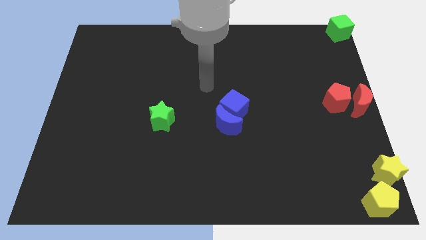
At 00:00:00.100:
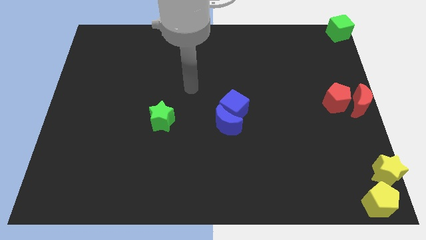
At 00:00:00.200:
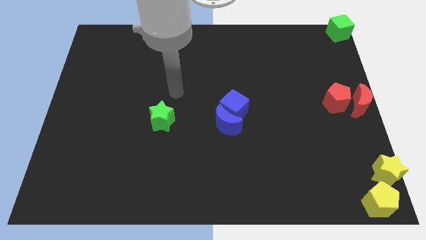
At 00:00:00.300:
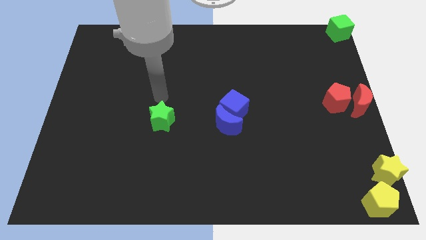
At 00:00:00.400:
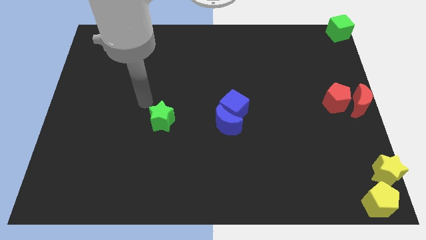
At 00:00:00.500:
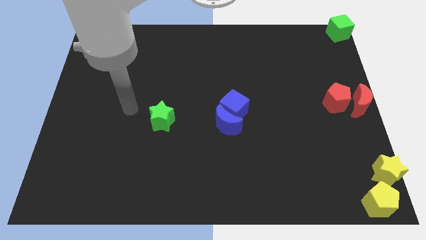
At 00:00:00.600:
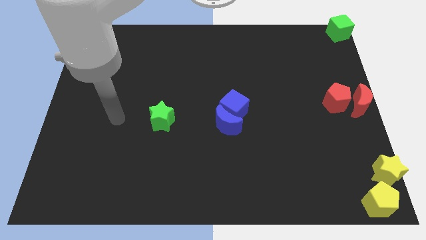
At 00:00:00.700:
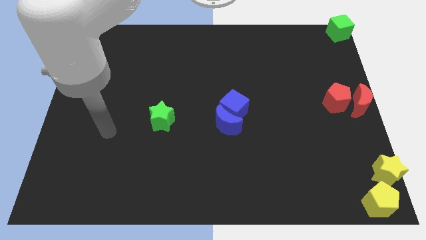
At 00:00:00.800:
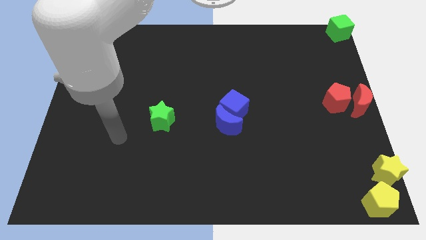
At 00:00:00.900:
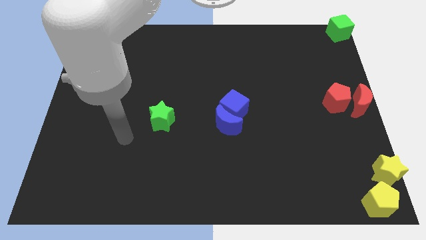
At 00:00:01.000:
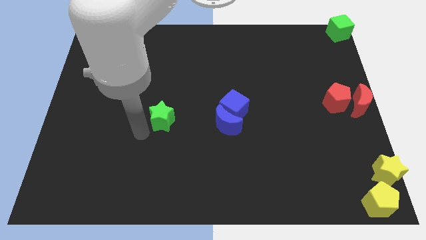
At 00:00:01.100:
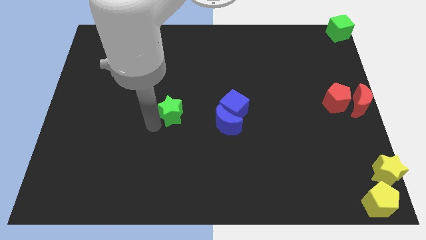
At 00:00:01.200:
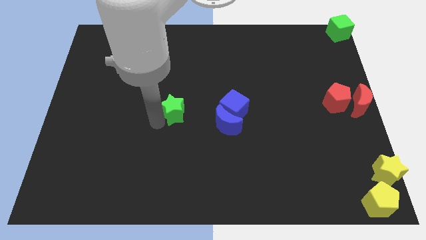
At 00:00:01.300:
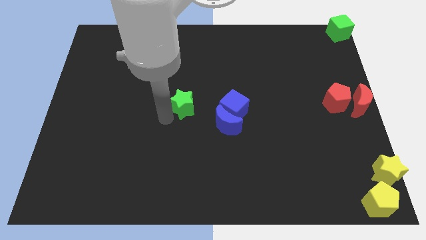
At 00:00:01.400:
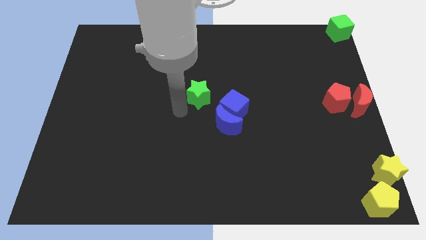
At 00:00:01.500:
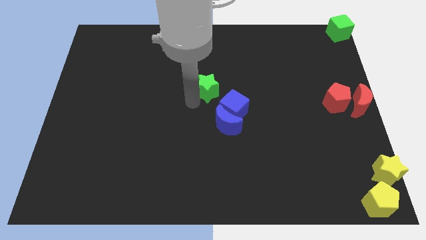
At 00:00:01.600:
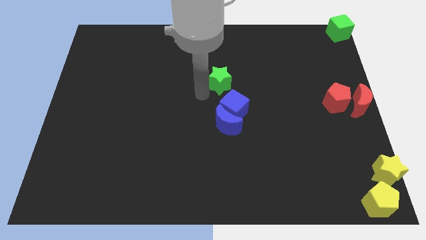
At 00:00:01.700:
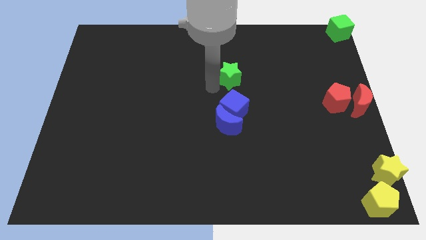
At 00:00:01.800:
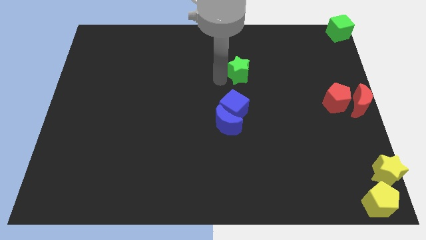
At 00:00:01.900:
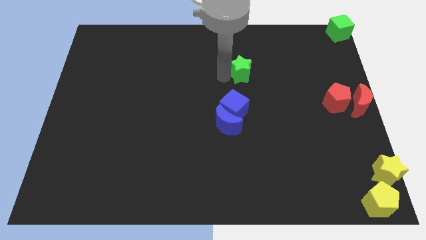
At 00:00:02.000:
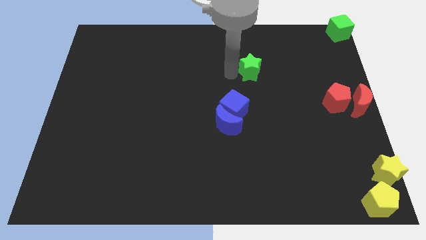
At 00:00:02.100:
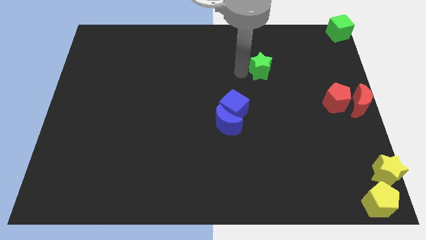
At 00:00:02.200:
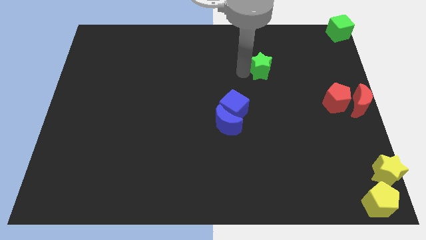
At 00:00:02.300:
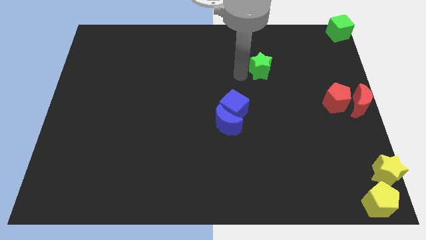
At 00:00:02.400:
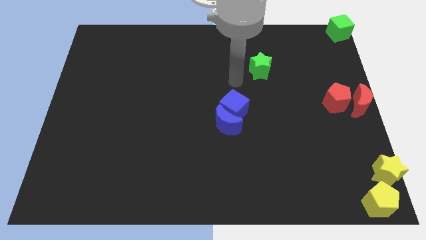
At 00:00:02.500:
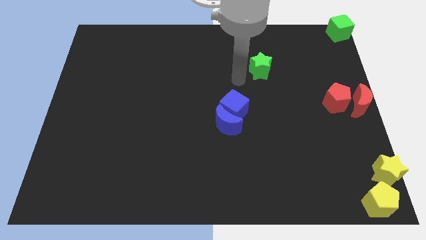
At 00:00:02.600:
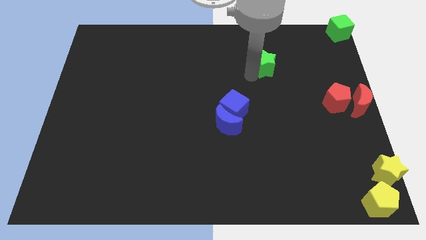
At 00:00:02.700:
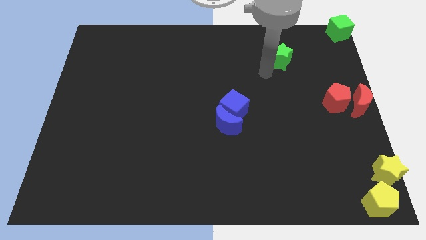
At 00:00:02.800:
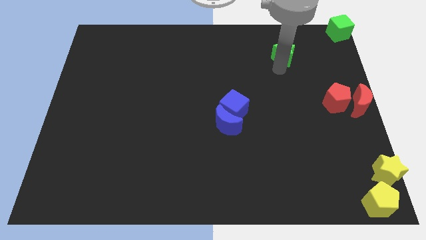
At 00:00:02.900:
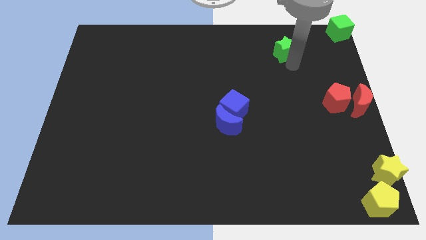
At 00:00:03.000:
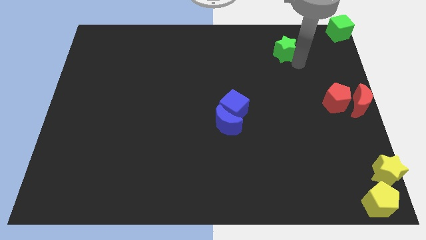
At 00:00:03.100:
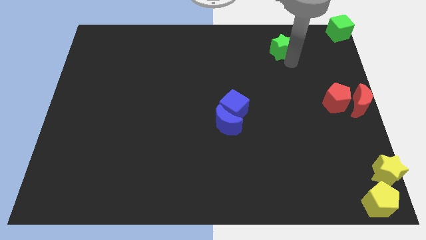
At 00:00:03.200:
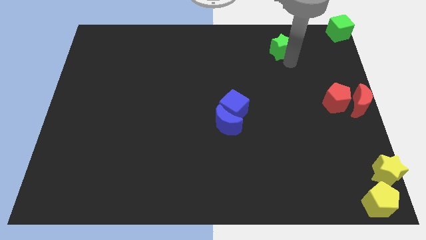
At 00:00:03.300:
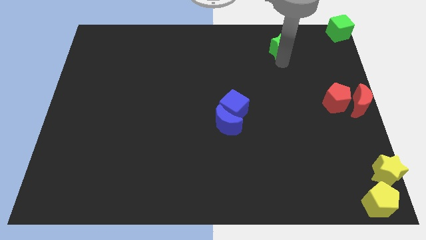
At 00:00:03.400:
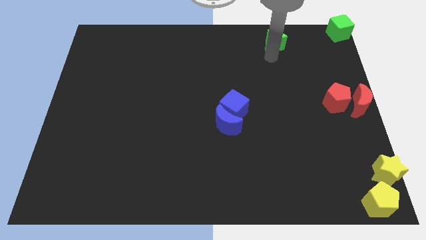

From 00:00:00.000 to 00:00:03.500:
slide the green star diagonally on the bottom left side of the green cube

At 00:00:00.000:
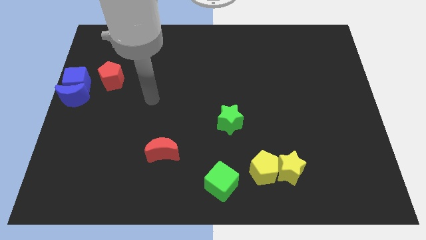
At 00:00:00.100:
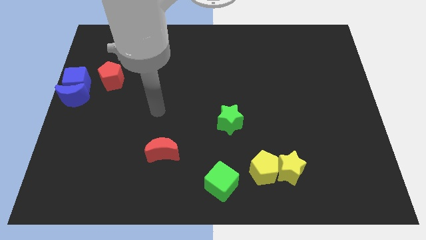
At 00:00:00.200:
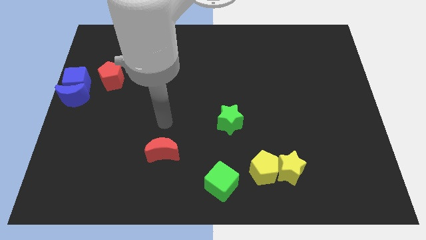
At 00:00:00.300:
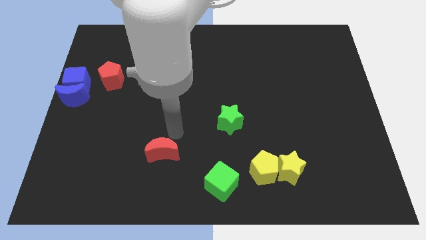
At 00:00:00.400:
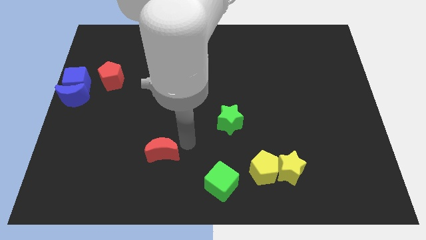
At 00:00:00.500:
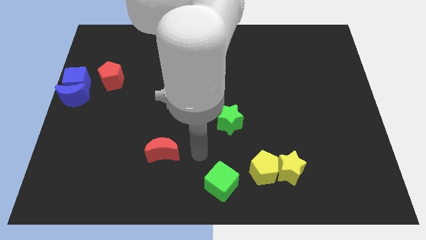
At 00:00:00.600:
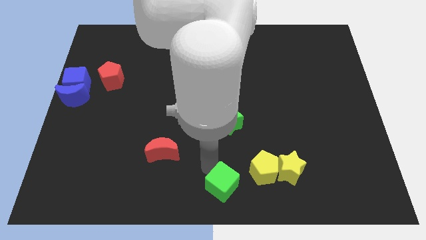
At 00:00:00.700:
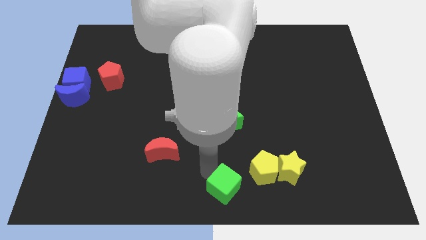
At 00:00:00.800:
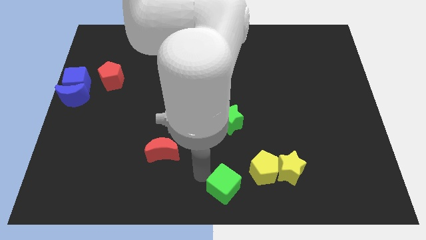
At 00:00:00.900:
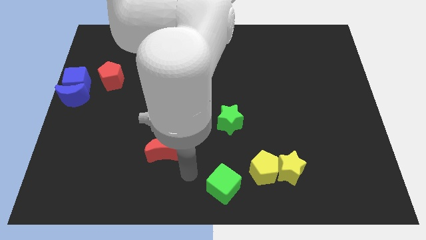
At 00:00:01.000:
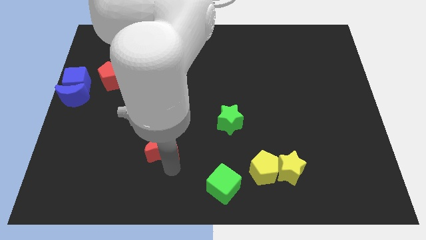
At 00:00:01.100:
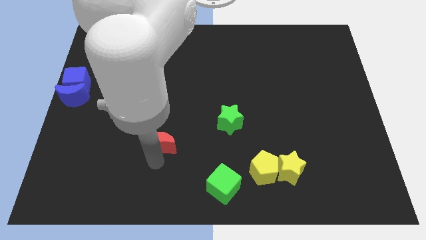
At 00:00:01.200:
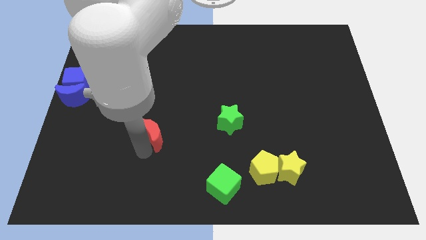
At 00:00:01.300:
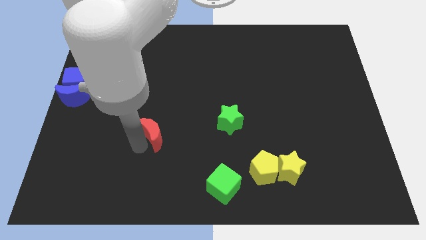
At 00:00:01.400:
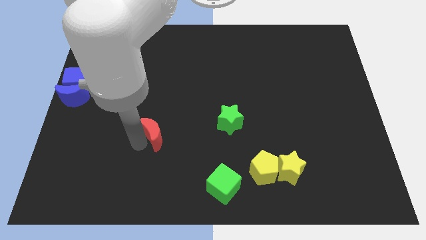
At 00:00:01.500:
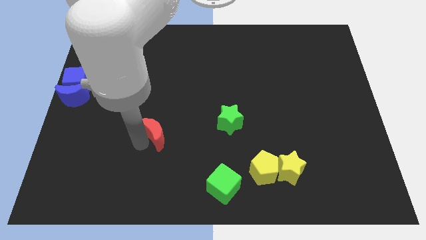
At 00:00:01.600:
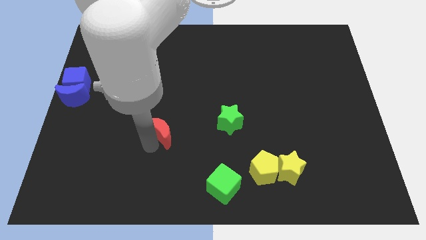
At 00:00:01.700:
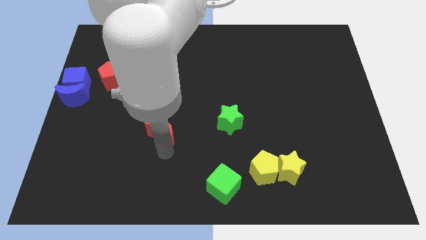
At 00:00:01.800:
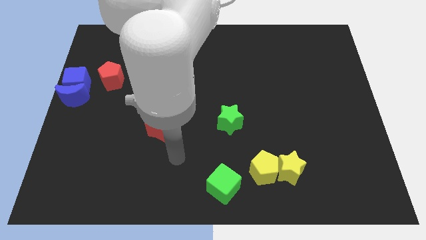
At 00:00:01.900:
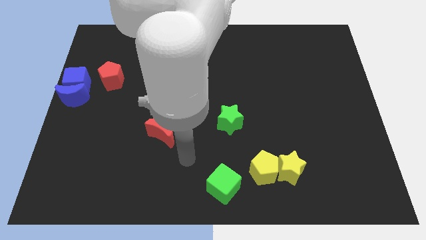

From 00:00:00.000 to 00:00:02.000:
move the red moon away from the green cube

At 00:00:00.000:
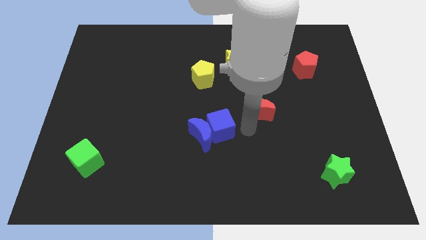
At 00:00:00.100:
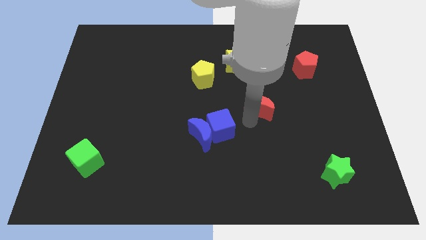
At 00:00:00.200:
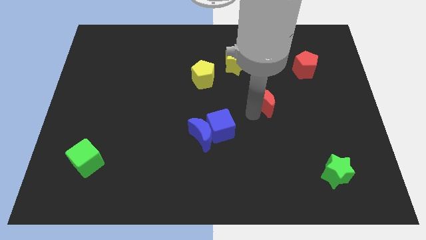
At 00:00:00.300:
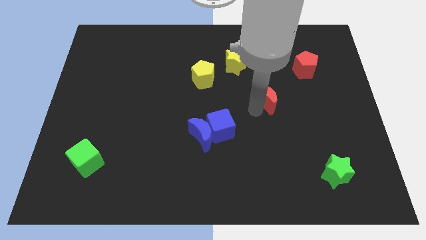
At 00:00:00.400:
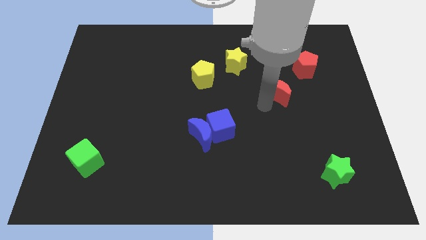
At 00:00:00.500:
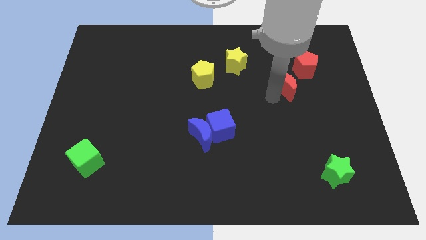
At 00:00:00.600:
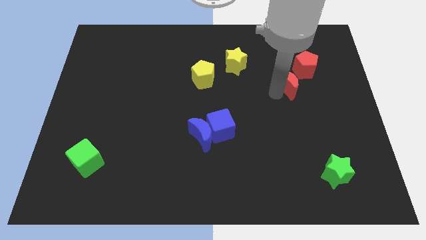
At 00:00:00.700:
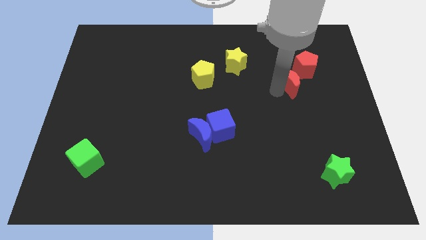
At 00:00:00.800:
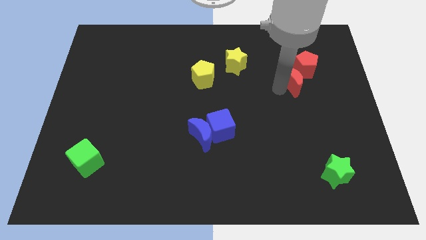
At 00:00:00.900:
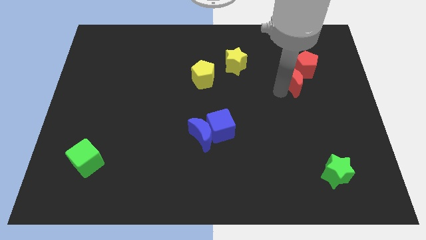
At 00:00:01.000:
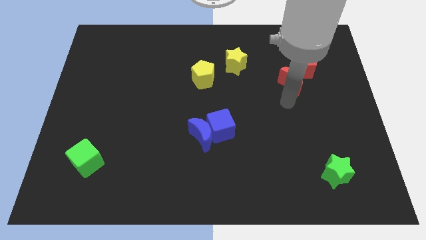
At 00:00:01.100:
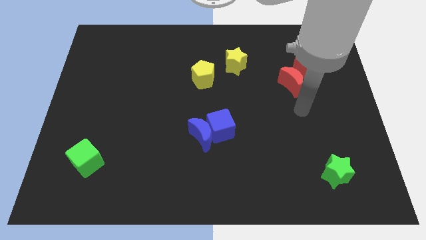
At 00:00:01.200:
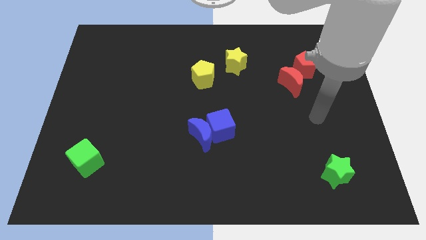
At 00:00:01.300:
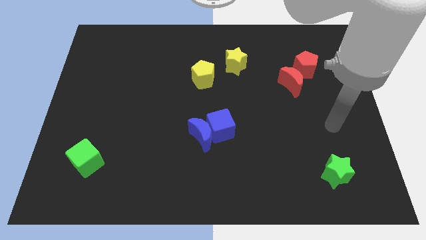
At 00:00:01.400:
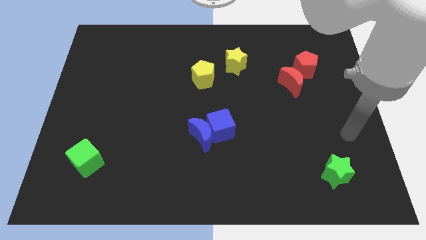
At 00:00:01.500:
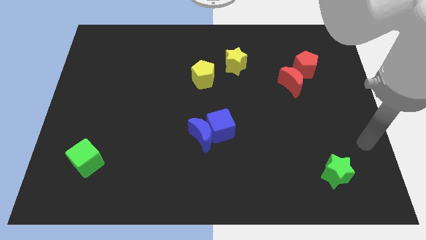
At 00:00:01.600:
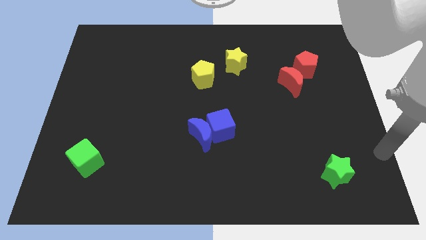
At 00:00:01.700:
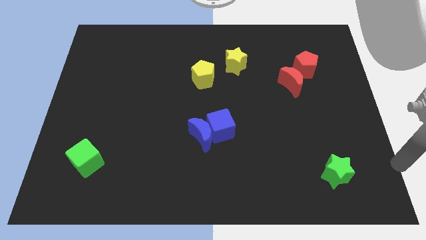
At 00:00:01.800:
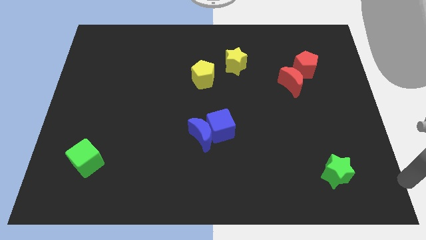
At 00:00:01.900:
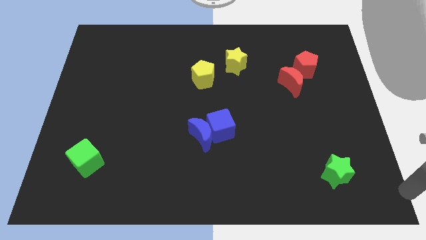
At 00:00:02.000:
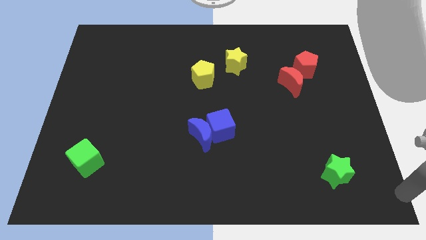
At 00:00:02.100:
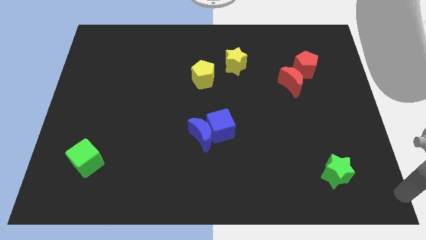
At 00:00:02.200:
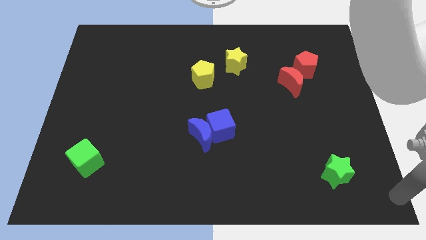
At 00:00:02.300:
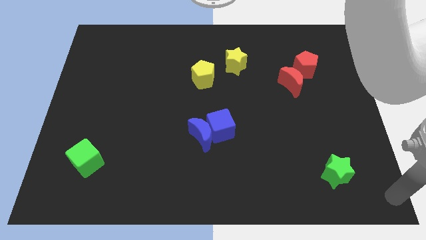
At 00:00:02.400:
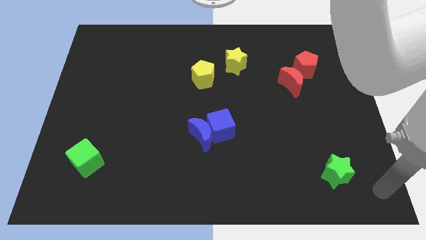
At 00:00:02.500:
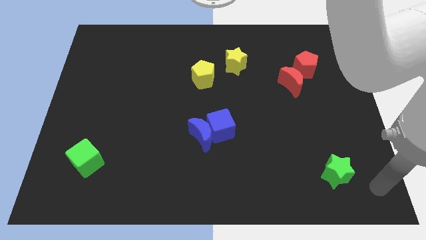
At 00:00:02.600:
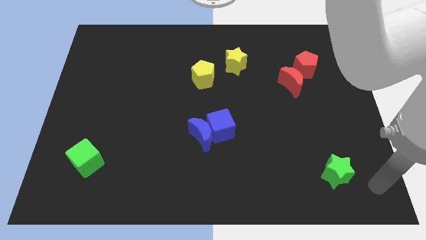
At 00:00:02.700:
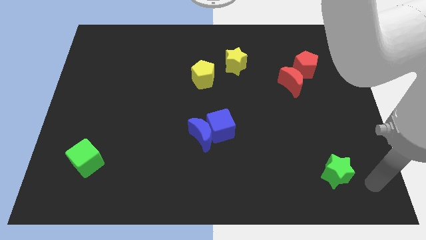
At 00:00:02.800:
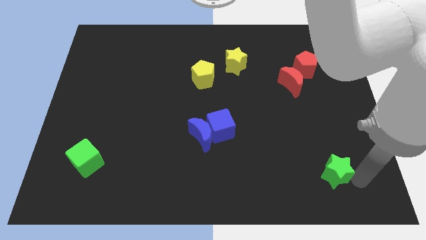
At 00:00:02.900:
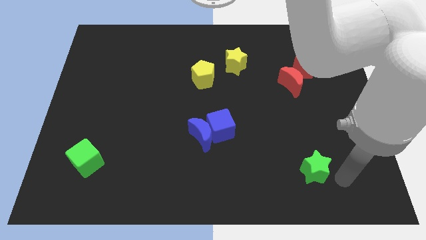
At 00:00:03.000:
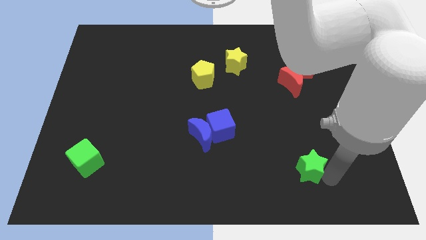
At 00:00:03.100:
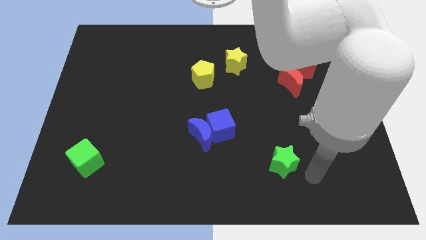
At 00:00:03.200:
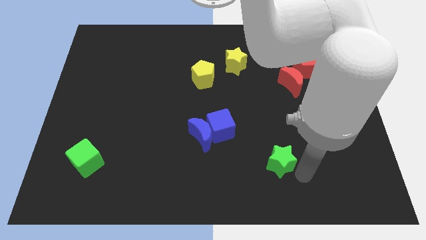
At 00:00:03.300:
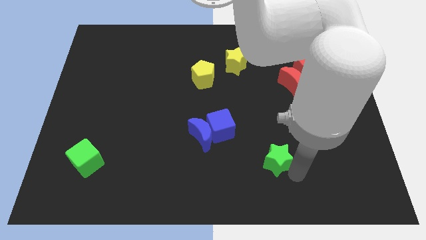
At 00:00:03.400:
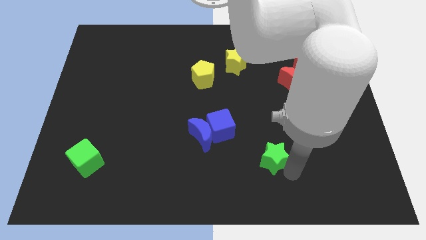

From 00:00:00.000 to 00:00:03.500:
push the red crescent into the red pentagon
